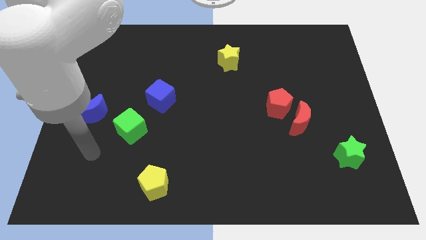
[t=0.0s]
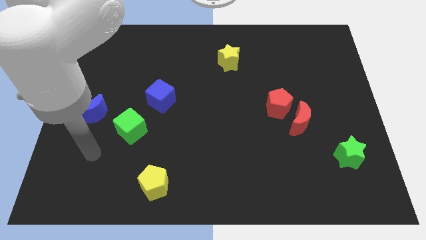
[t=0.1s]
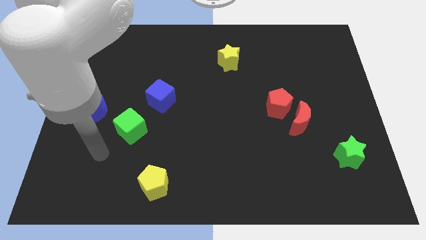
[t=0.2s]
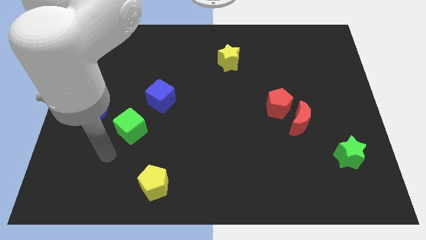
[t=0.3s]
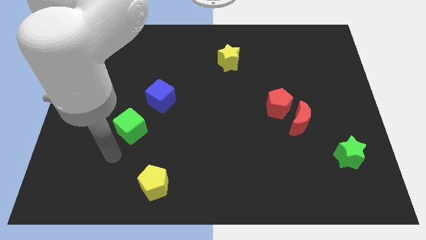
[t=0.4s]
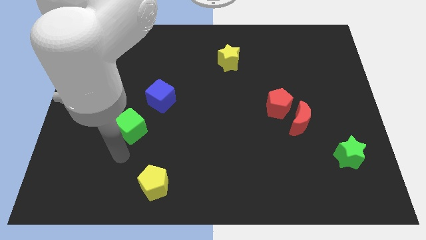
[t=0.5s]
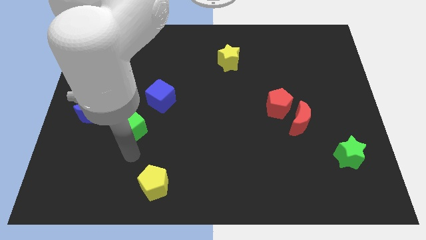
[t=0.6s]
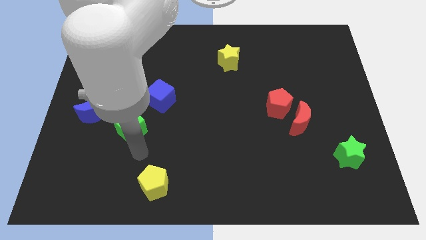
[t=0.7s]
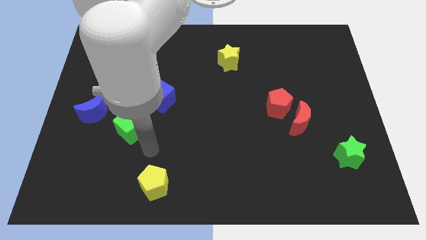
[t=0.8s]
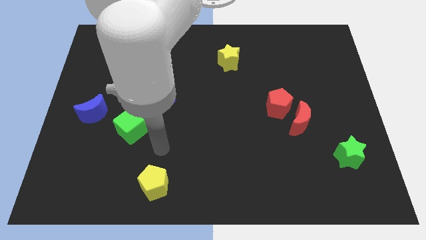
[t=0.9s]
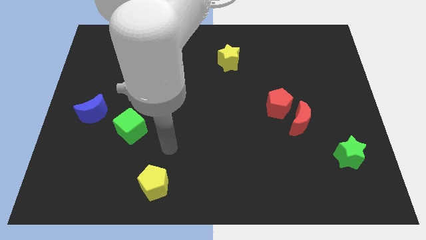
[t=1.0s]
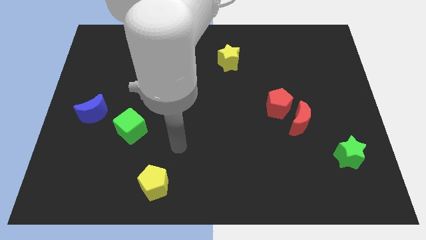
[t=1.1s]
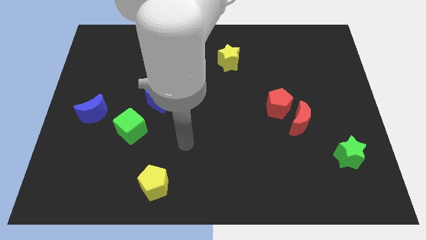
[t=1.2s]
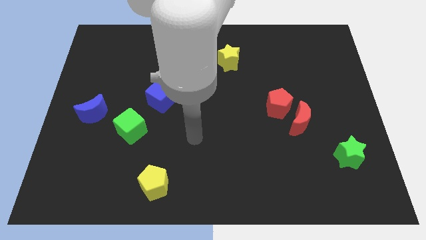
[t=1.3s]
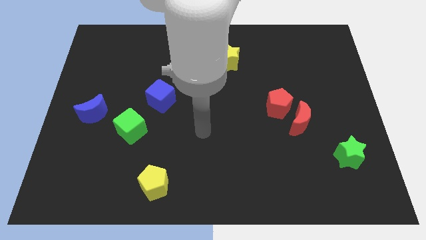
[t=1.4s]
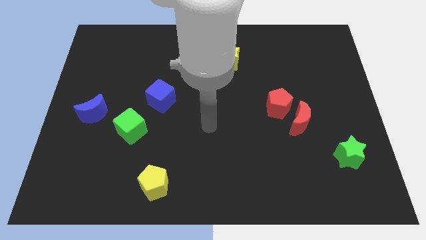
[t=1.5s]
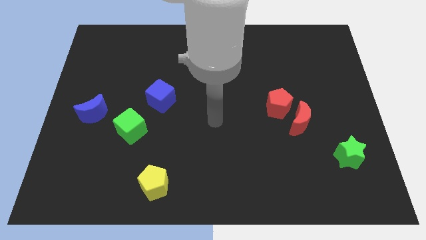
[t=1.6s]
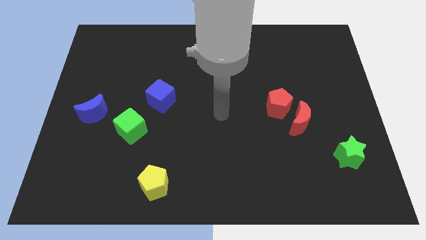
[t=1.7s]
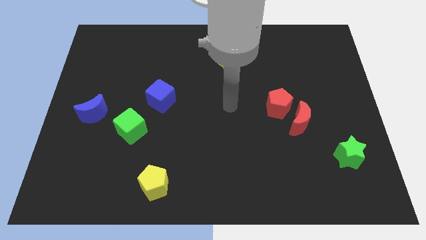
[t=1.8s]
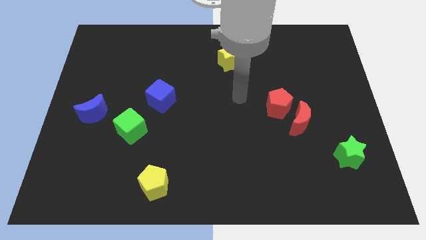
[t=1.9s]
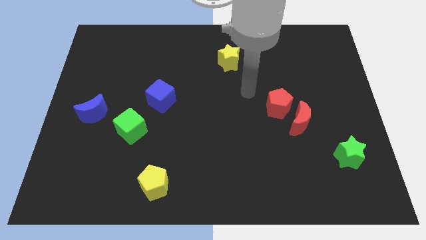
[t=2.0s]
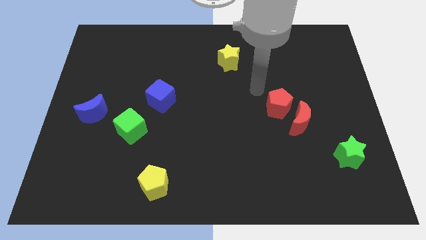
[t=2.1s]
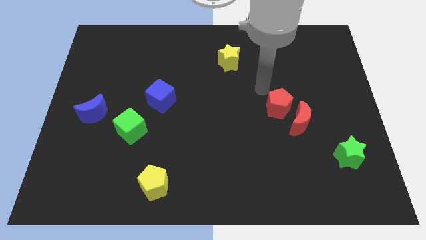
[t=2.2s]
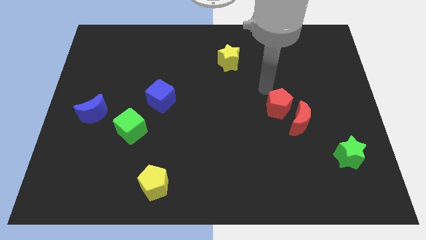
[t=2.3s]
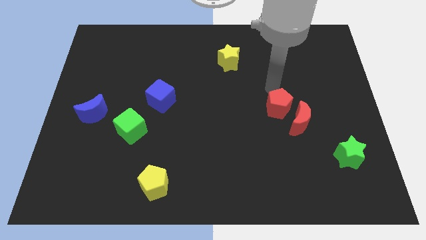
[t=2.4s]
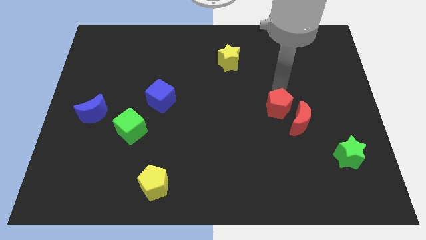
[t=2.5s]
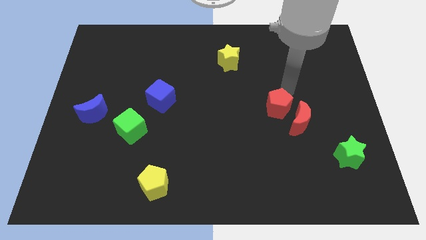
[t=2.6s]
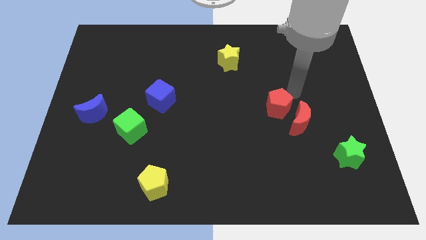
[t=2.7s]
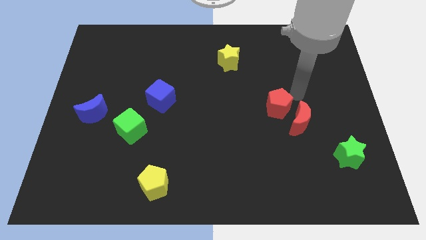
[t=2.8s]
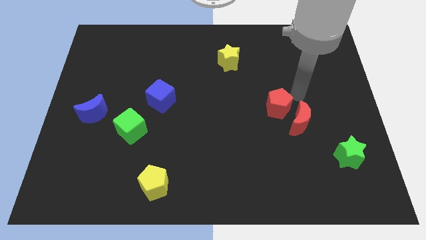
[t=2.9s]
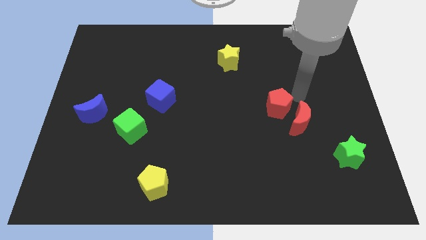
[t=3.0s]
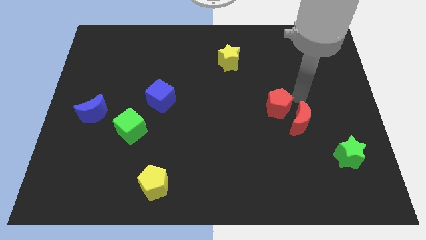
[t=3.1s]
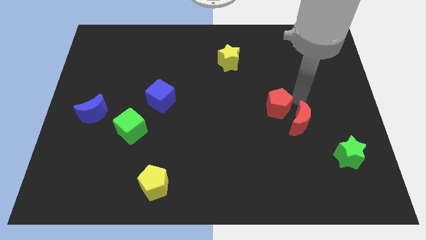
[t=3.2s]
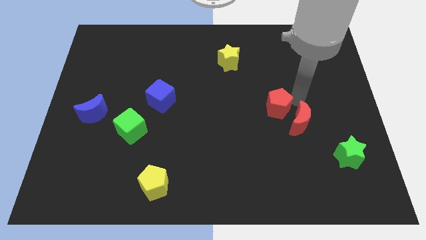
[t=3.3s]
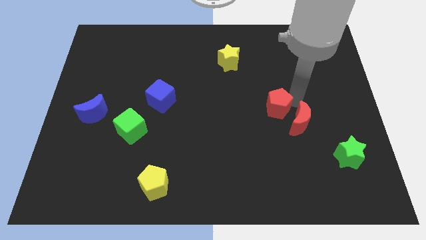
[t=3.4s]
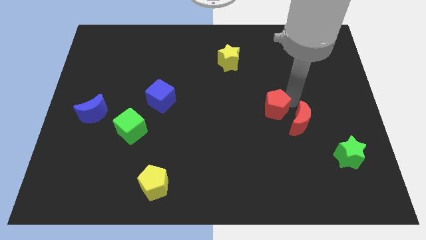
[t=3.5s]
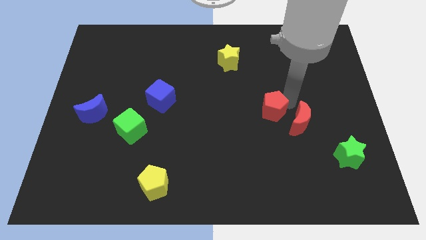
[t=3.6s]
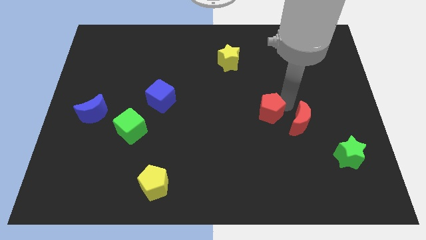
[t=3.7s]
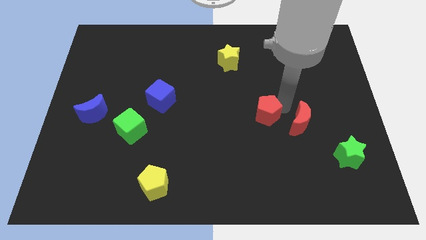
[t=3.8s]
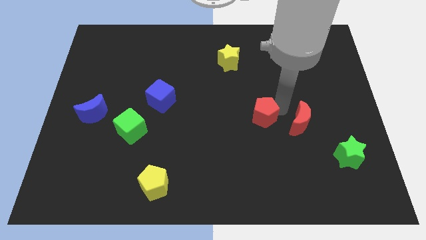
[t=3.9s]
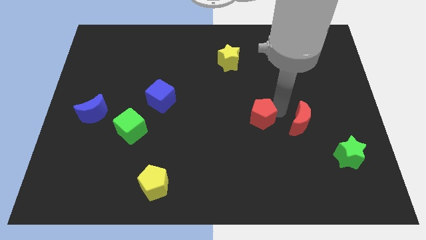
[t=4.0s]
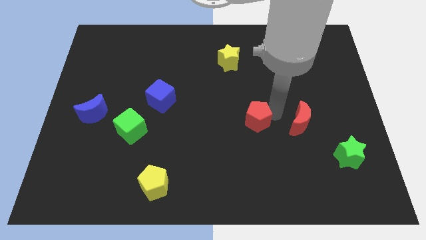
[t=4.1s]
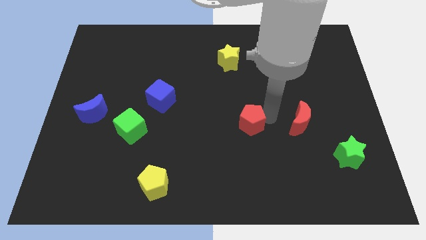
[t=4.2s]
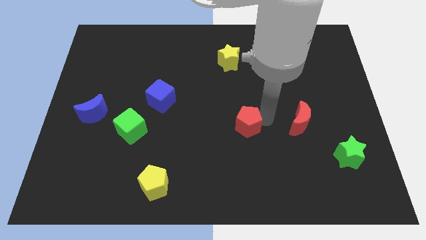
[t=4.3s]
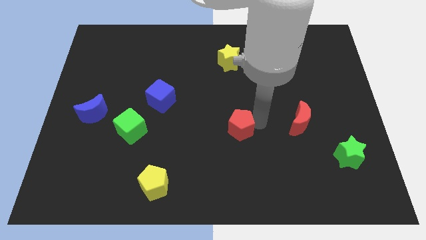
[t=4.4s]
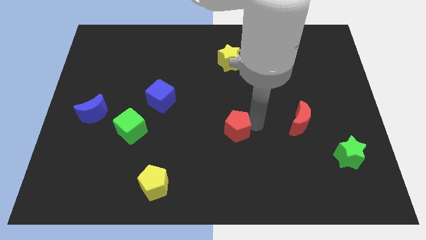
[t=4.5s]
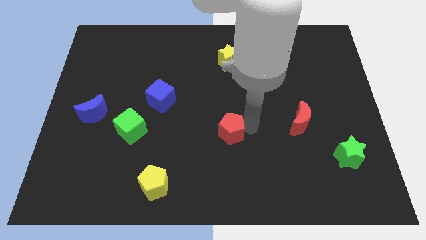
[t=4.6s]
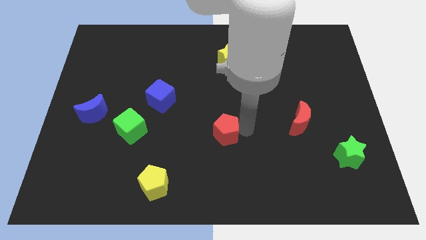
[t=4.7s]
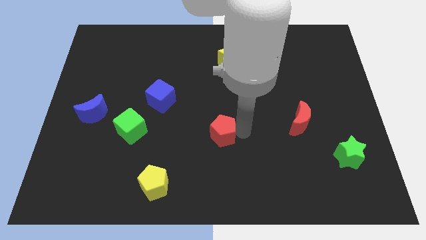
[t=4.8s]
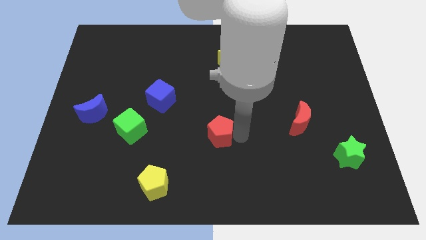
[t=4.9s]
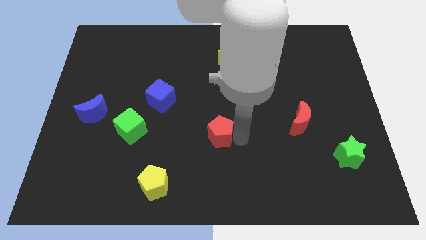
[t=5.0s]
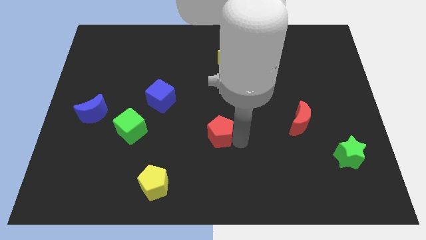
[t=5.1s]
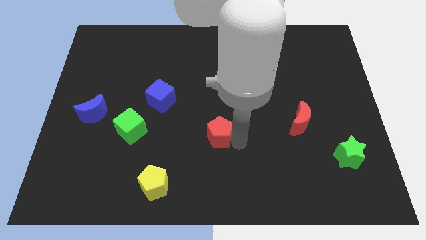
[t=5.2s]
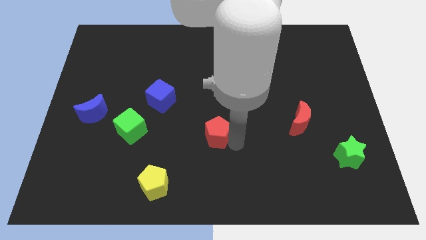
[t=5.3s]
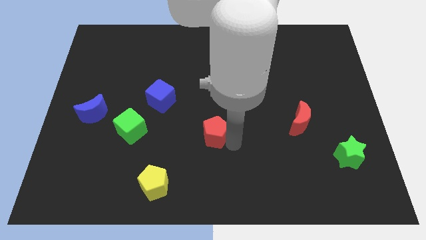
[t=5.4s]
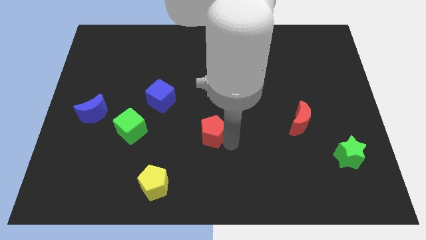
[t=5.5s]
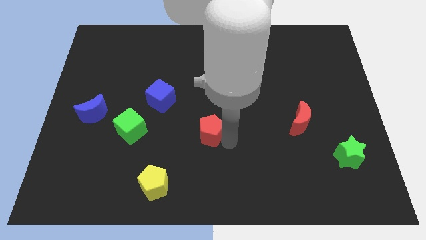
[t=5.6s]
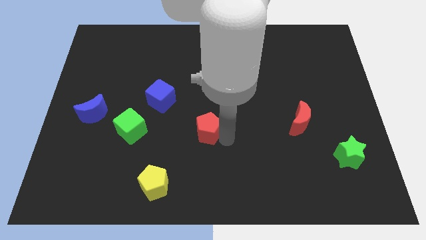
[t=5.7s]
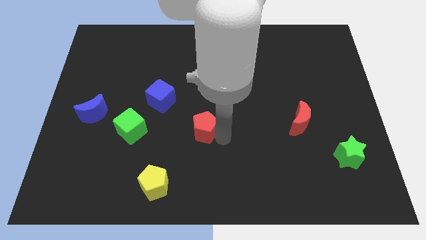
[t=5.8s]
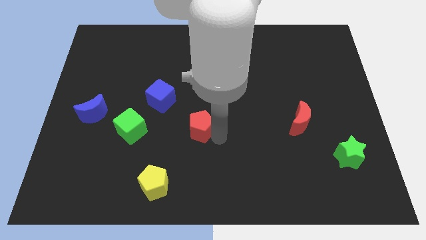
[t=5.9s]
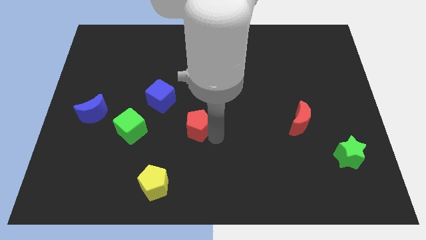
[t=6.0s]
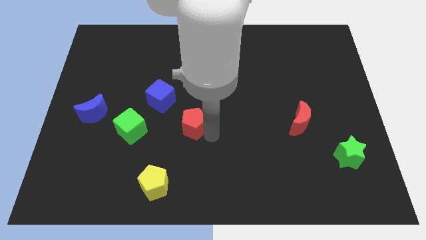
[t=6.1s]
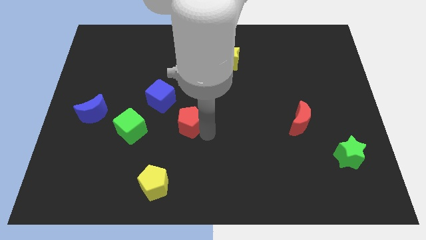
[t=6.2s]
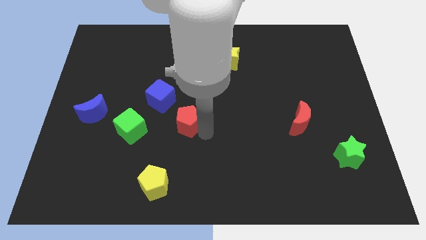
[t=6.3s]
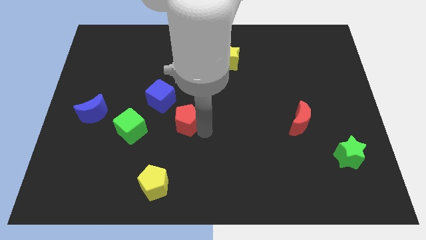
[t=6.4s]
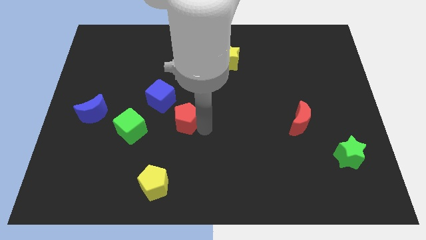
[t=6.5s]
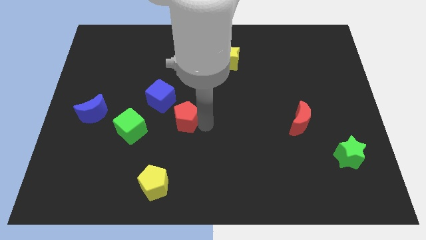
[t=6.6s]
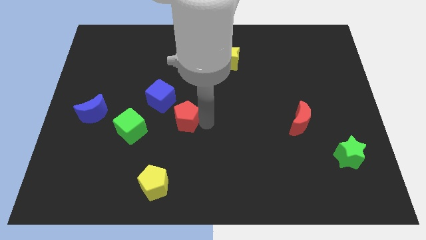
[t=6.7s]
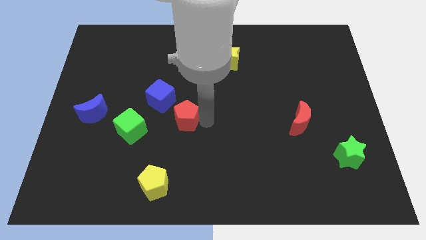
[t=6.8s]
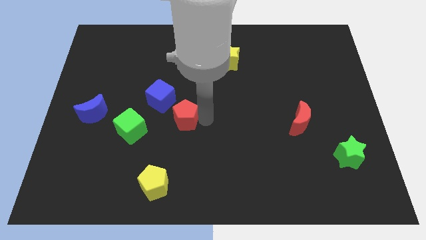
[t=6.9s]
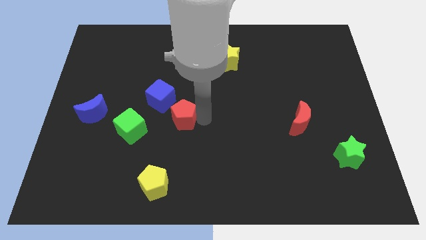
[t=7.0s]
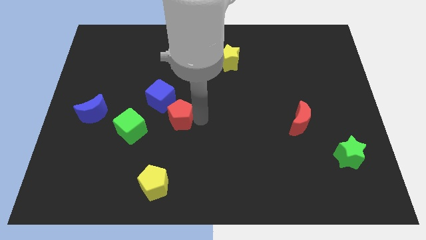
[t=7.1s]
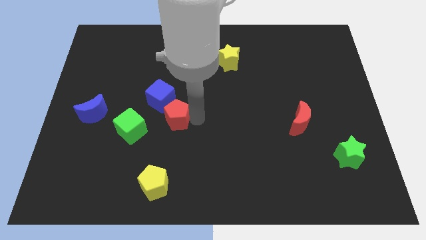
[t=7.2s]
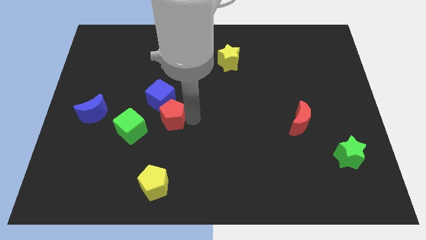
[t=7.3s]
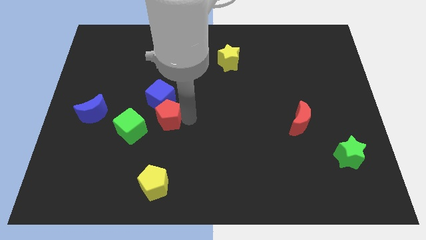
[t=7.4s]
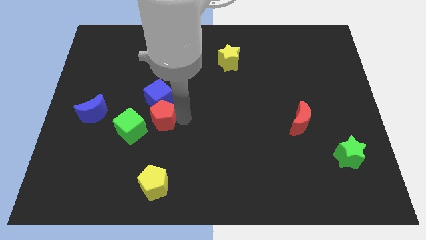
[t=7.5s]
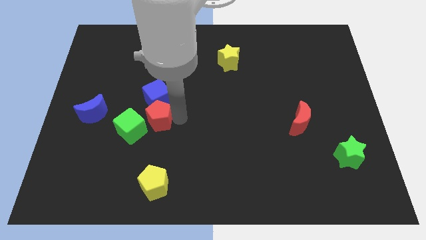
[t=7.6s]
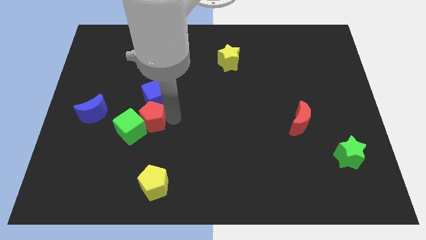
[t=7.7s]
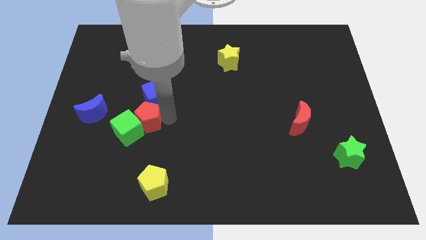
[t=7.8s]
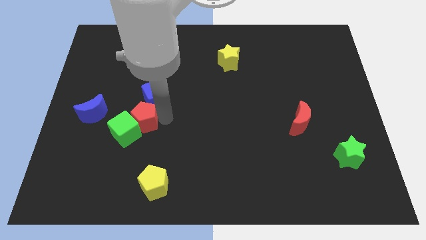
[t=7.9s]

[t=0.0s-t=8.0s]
put the red pentagon to the green cube

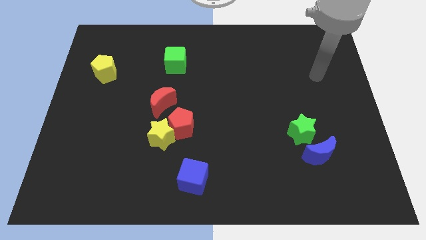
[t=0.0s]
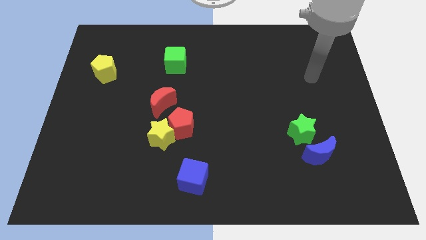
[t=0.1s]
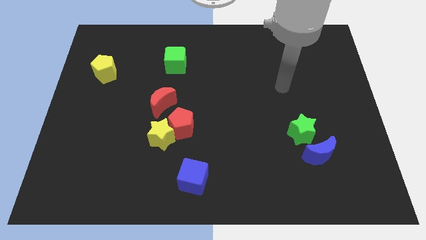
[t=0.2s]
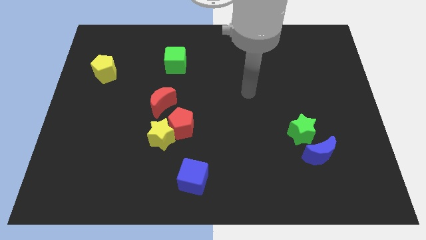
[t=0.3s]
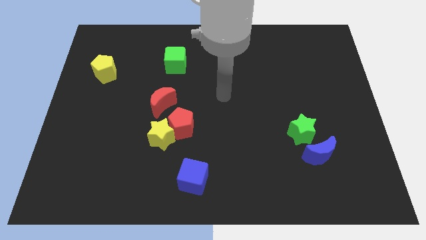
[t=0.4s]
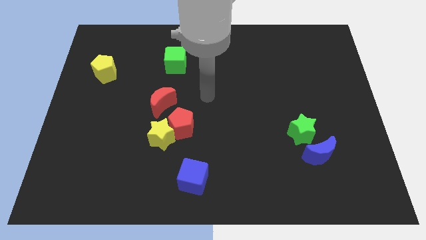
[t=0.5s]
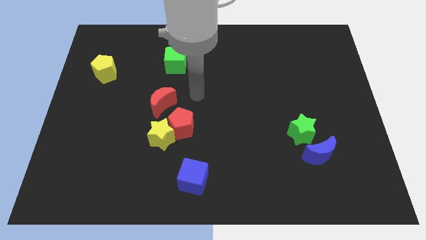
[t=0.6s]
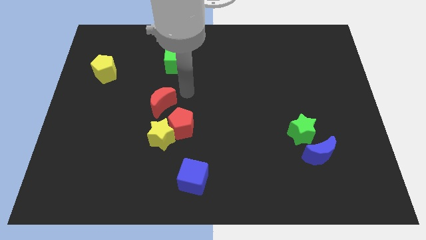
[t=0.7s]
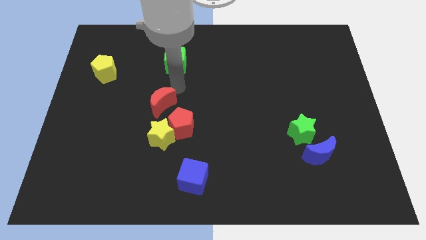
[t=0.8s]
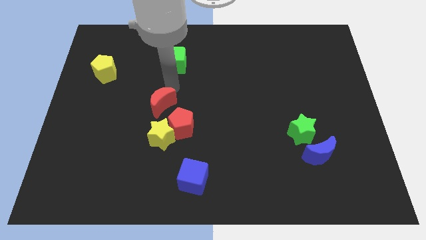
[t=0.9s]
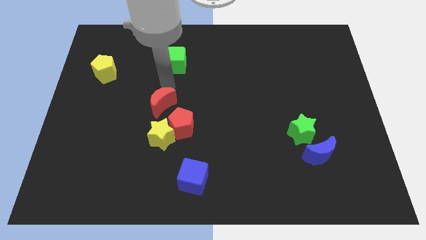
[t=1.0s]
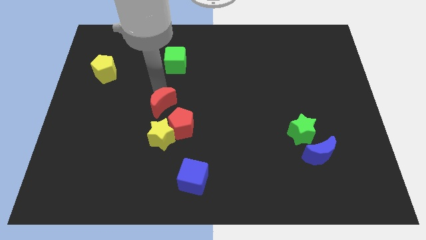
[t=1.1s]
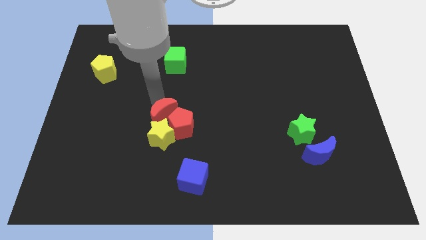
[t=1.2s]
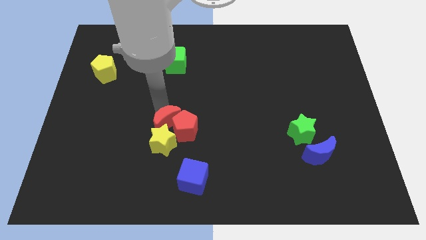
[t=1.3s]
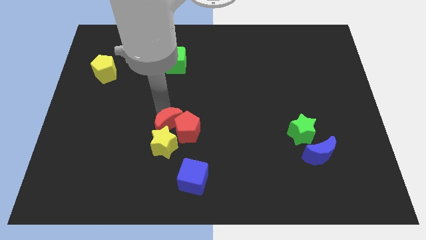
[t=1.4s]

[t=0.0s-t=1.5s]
move the red moon close to the red pentagon
